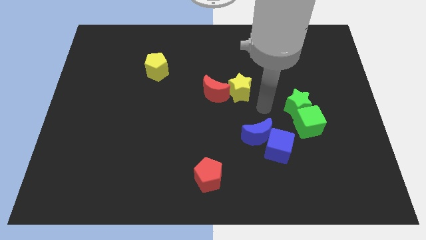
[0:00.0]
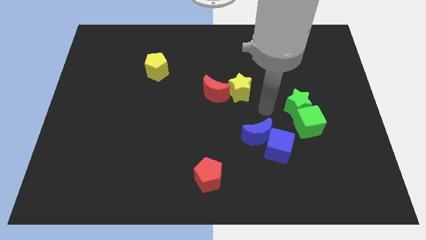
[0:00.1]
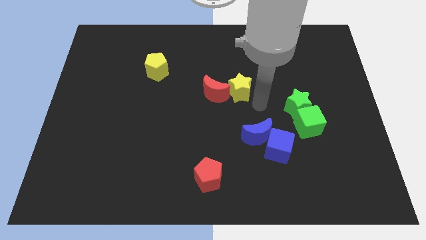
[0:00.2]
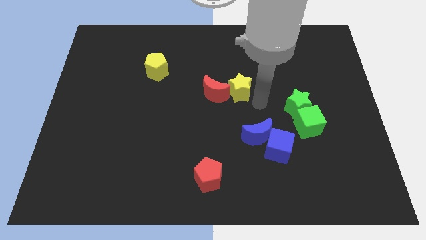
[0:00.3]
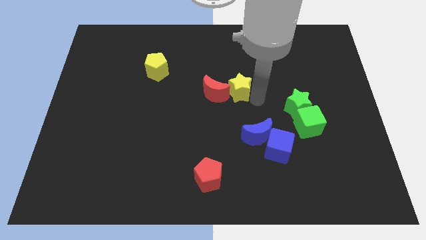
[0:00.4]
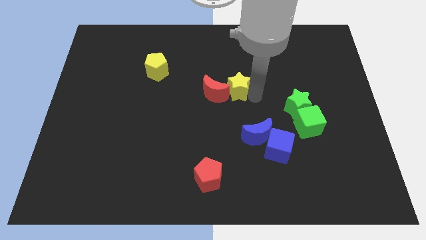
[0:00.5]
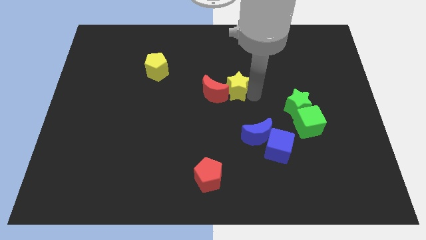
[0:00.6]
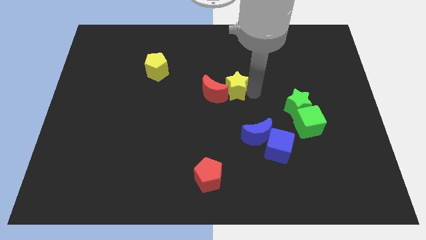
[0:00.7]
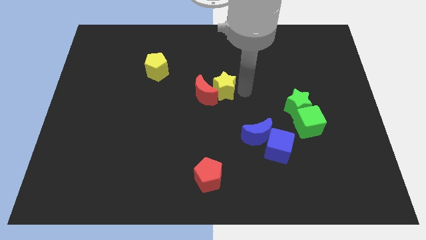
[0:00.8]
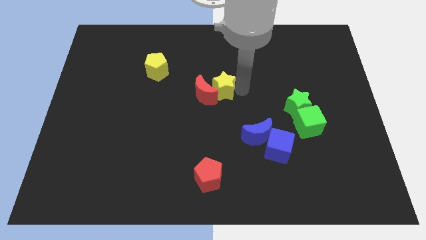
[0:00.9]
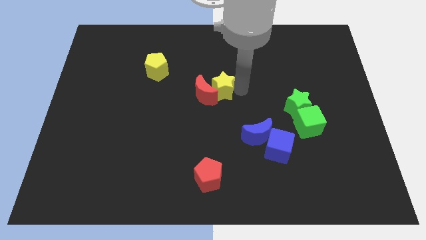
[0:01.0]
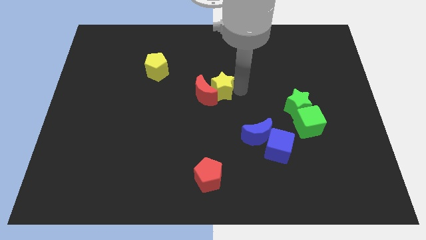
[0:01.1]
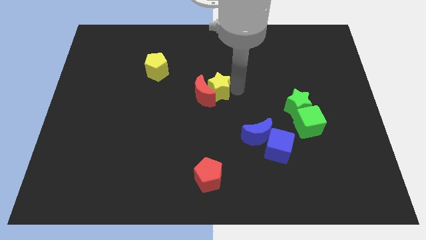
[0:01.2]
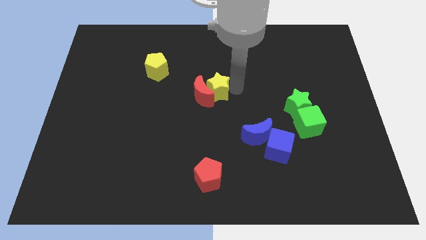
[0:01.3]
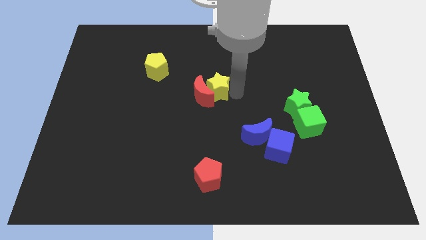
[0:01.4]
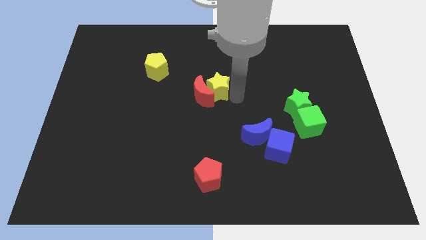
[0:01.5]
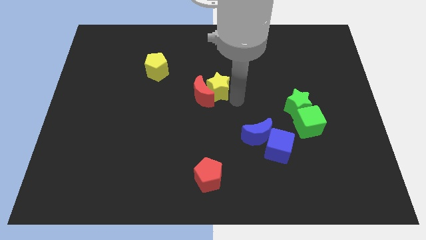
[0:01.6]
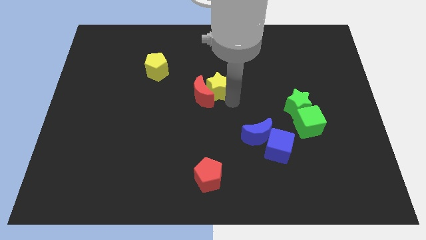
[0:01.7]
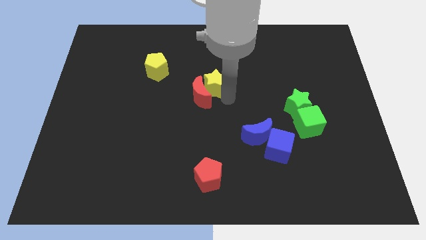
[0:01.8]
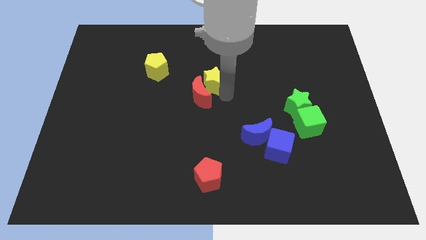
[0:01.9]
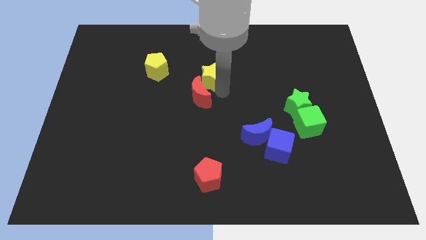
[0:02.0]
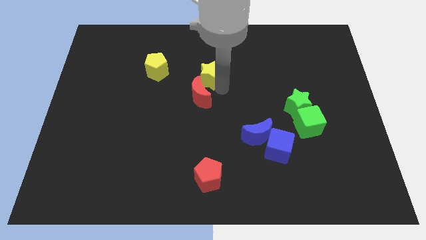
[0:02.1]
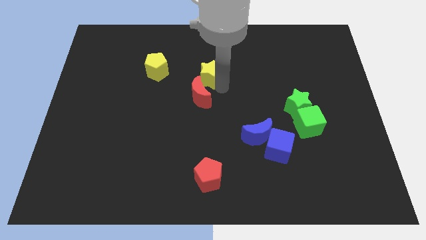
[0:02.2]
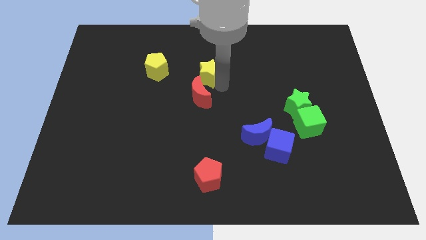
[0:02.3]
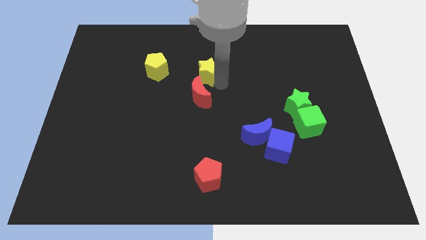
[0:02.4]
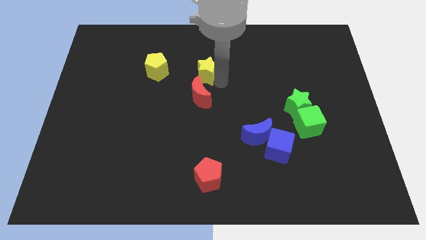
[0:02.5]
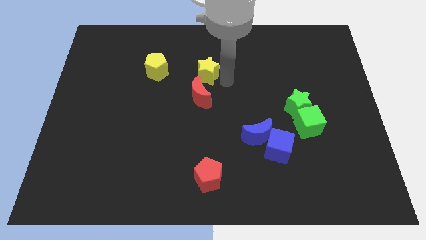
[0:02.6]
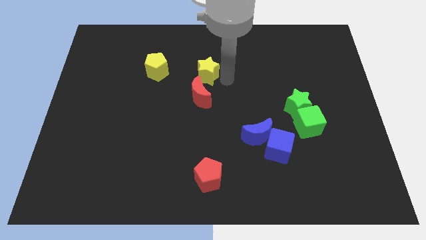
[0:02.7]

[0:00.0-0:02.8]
drag yellow star upwards

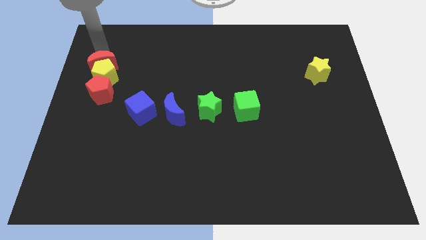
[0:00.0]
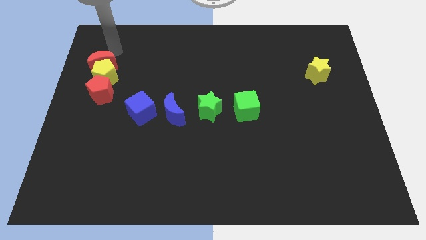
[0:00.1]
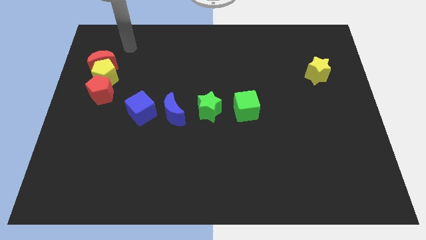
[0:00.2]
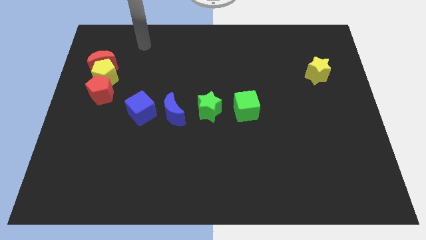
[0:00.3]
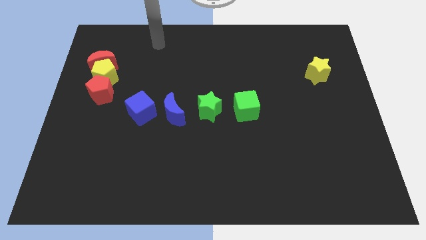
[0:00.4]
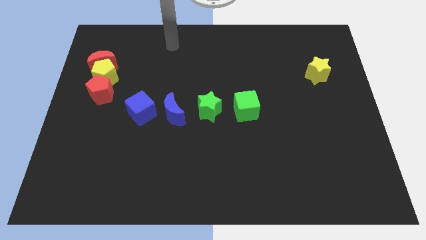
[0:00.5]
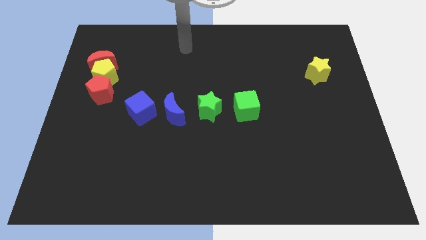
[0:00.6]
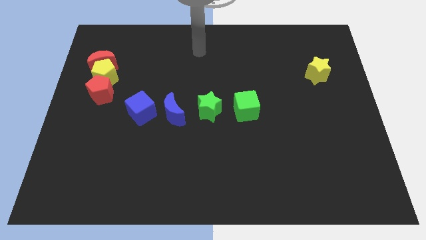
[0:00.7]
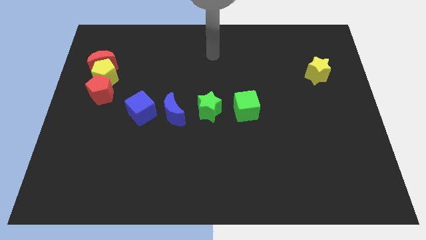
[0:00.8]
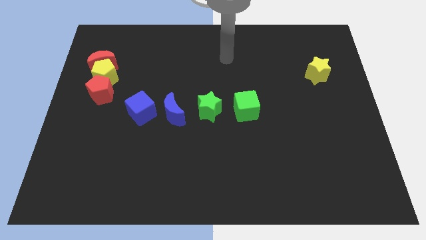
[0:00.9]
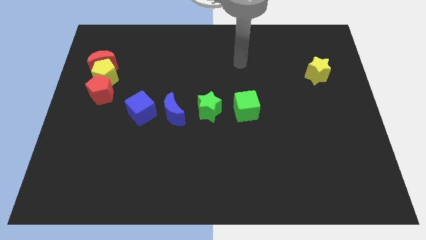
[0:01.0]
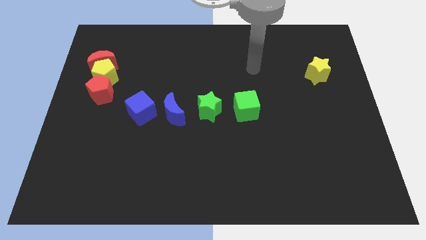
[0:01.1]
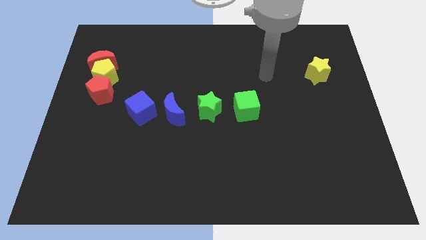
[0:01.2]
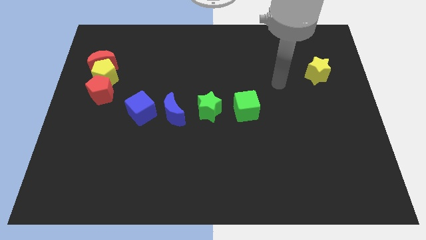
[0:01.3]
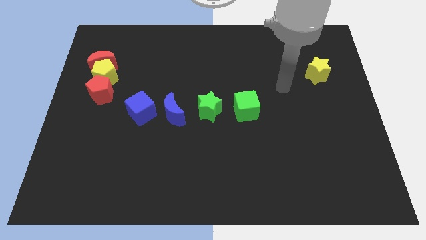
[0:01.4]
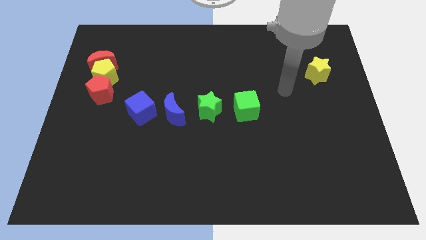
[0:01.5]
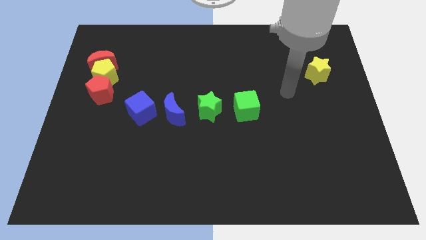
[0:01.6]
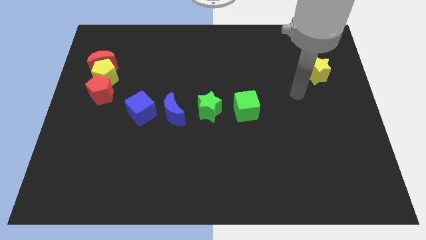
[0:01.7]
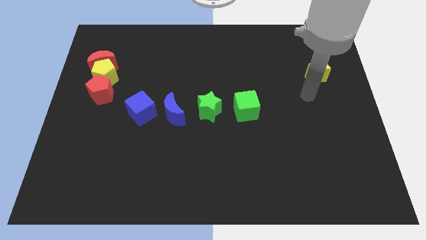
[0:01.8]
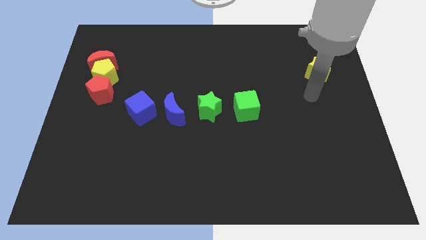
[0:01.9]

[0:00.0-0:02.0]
point your arm below yellow star

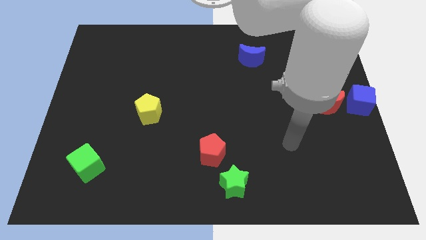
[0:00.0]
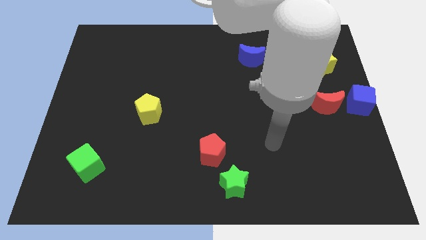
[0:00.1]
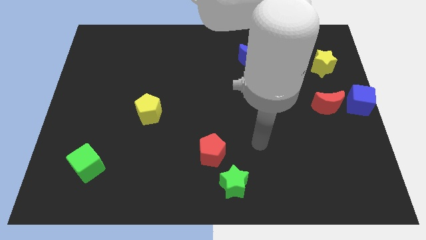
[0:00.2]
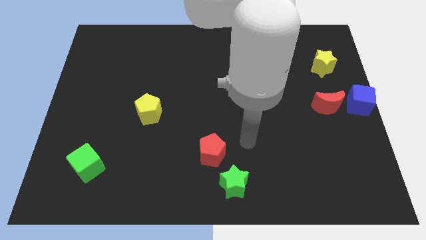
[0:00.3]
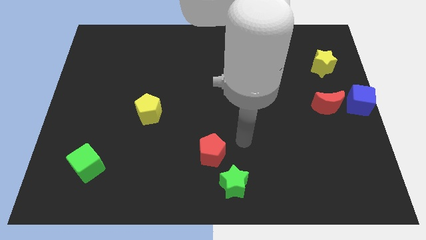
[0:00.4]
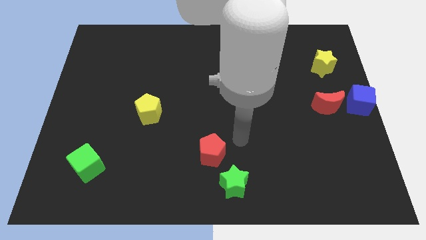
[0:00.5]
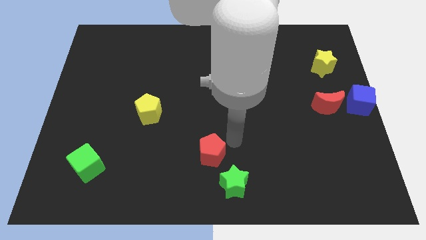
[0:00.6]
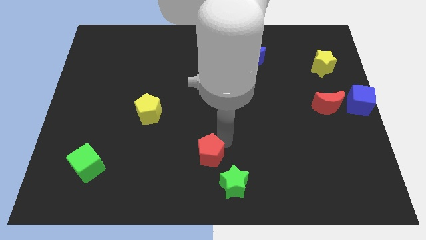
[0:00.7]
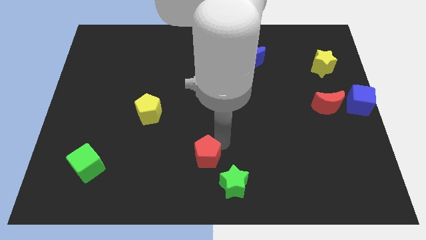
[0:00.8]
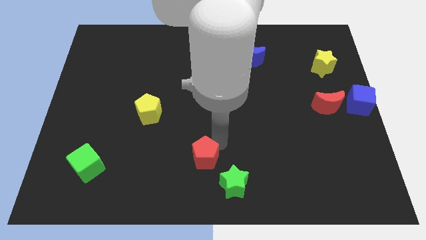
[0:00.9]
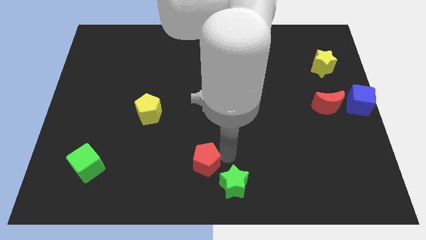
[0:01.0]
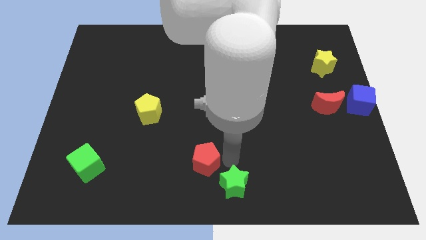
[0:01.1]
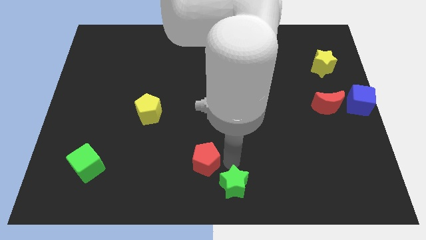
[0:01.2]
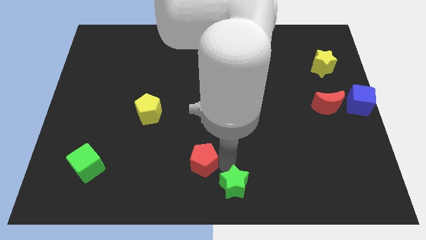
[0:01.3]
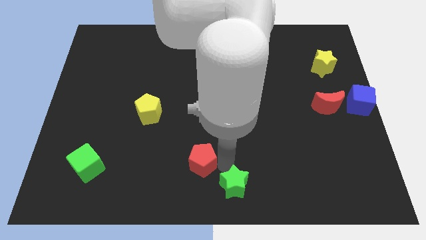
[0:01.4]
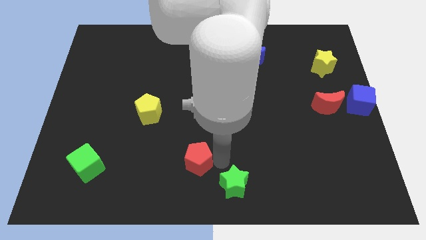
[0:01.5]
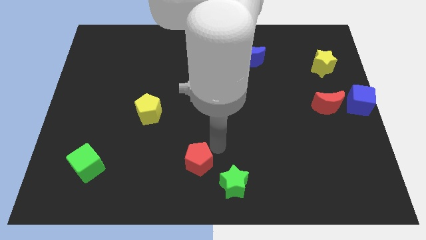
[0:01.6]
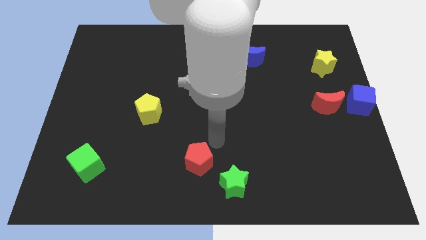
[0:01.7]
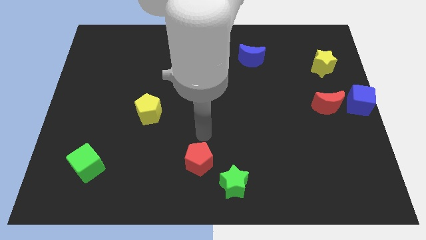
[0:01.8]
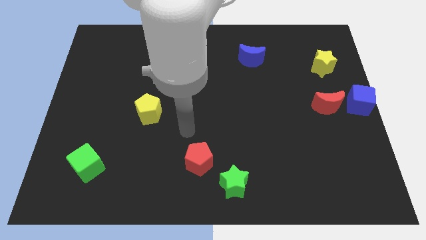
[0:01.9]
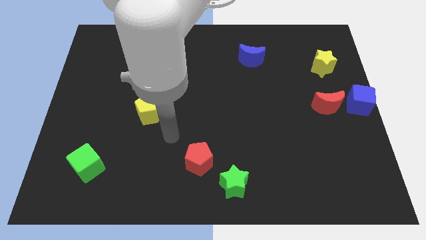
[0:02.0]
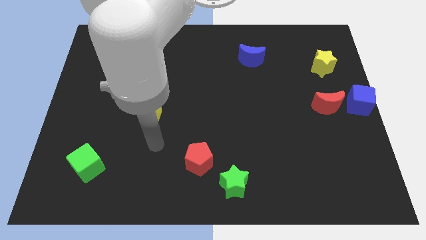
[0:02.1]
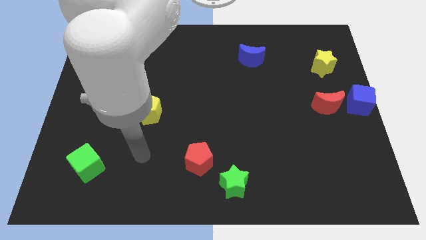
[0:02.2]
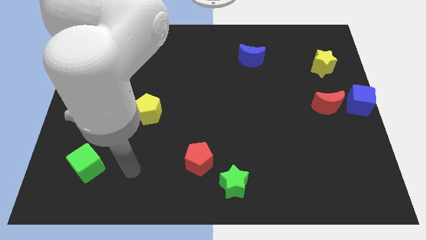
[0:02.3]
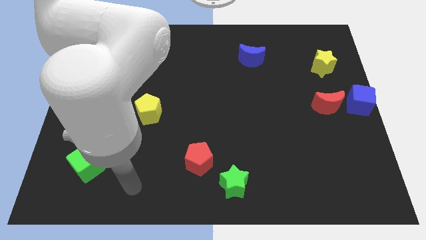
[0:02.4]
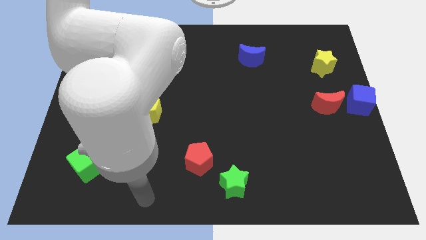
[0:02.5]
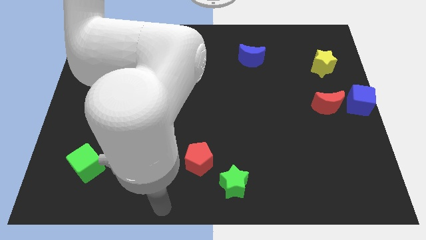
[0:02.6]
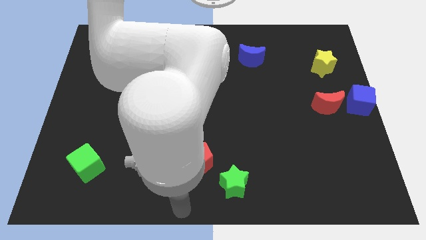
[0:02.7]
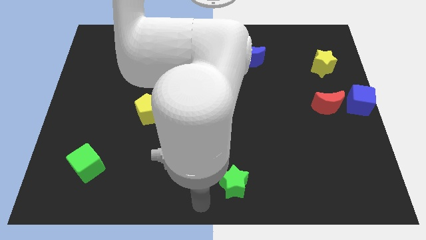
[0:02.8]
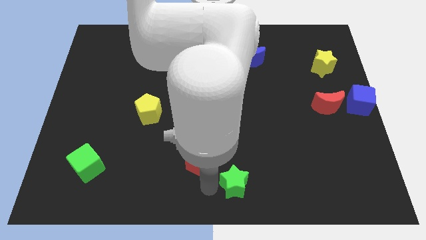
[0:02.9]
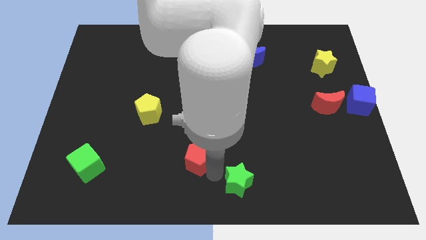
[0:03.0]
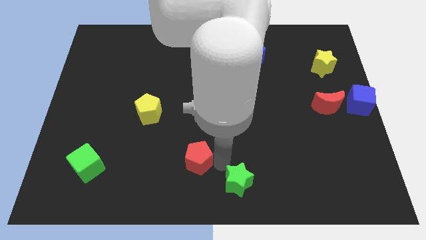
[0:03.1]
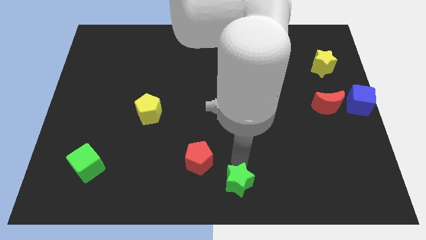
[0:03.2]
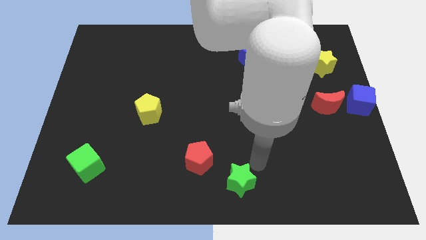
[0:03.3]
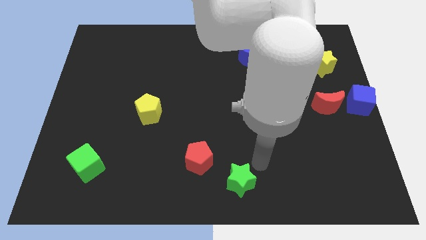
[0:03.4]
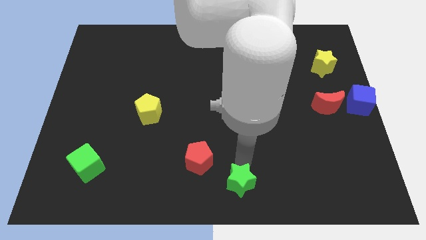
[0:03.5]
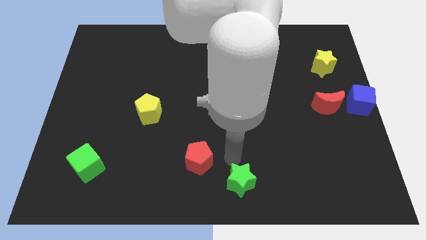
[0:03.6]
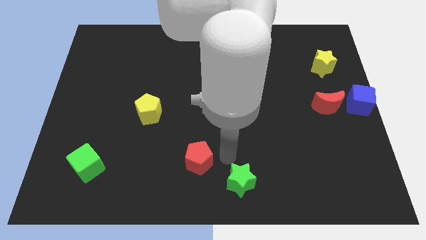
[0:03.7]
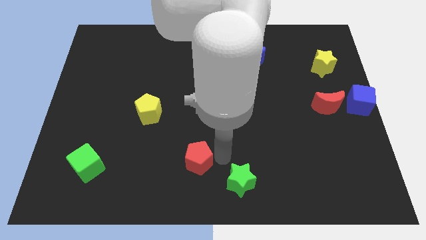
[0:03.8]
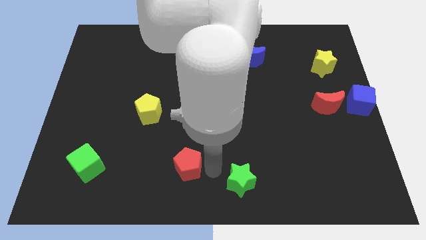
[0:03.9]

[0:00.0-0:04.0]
place the red pentagon towards the top left side of the green star

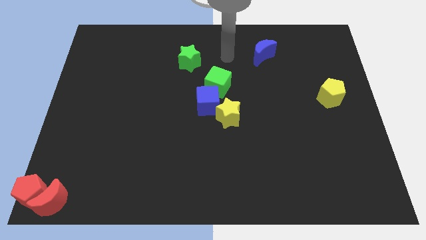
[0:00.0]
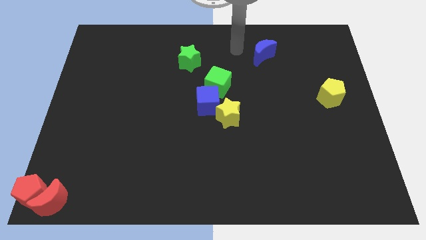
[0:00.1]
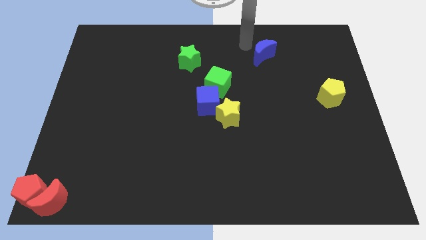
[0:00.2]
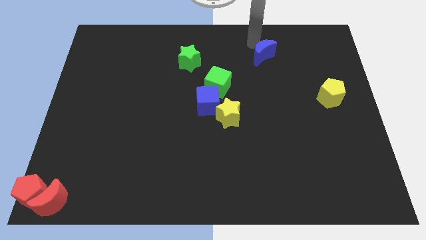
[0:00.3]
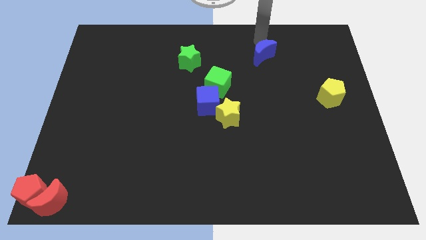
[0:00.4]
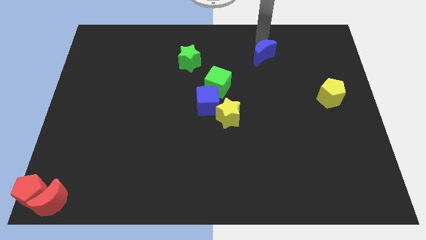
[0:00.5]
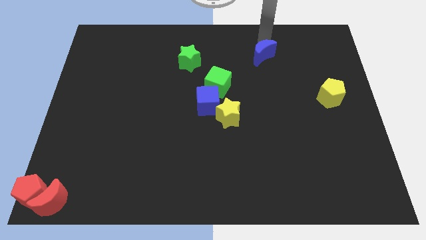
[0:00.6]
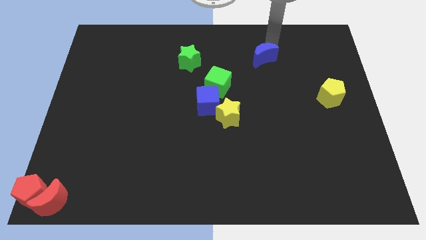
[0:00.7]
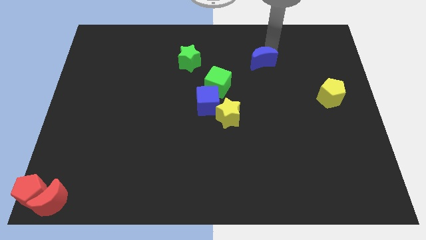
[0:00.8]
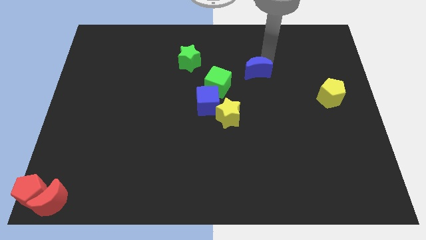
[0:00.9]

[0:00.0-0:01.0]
tap the blue crescent
